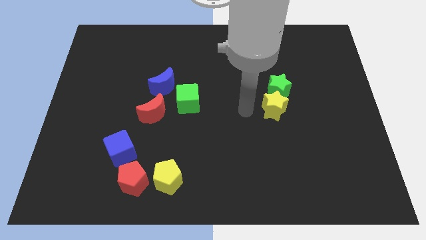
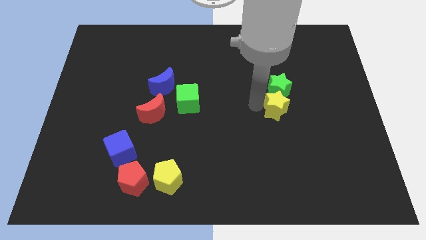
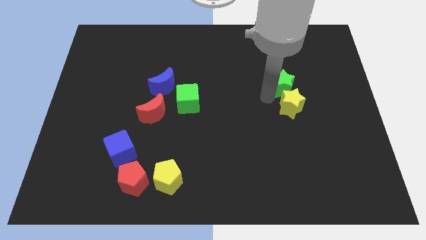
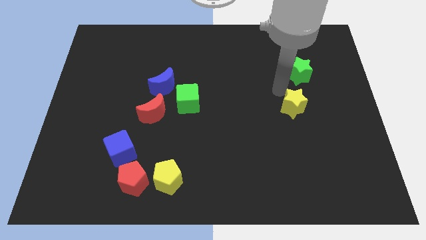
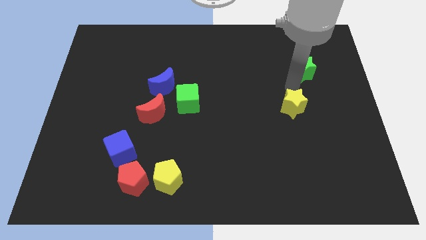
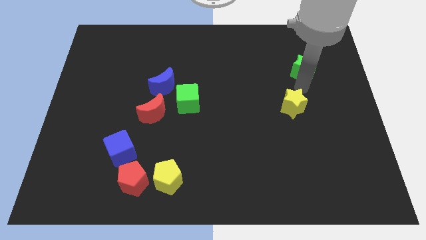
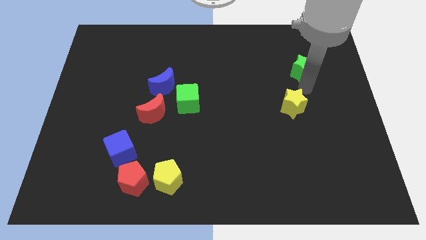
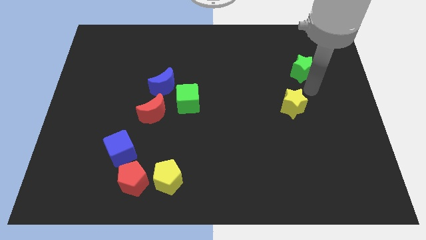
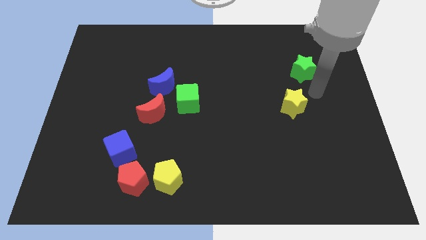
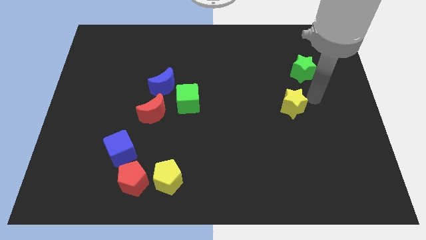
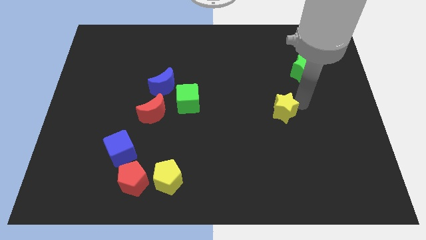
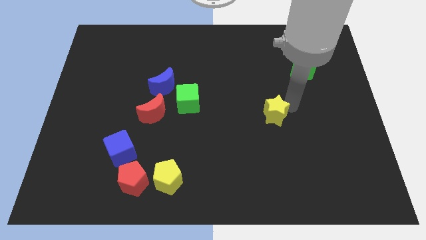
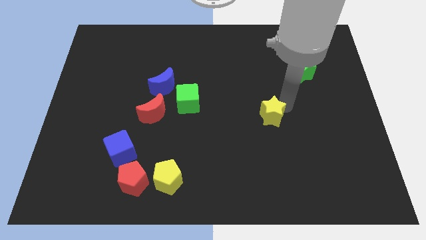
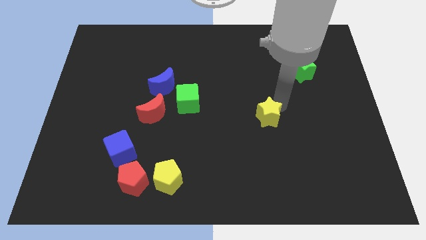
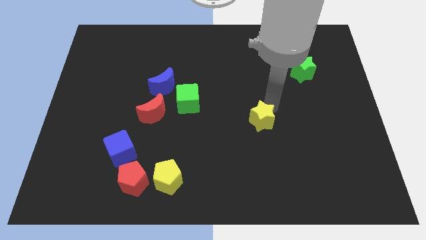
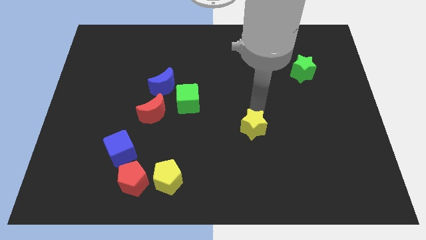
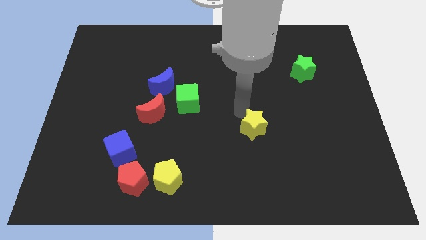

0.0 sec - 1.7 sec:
push yellow and green stars apart

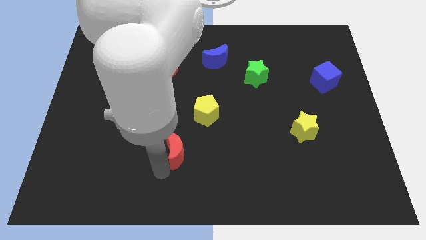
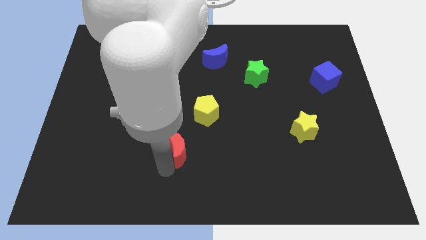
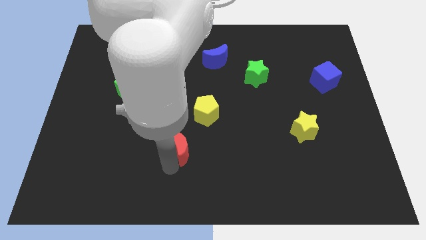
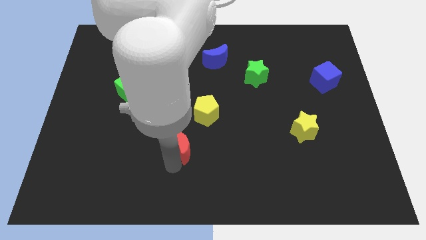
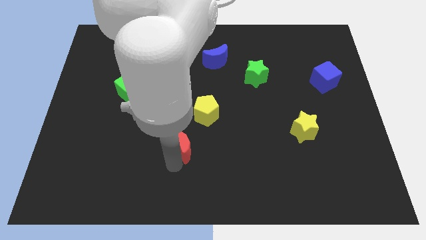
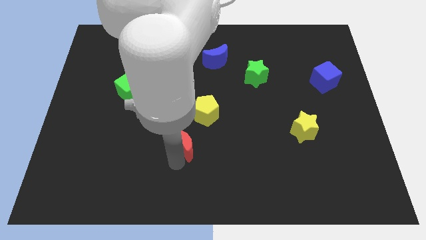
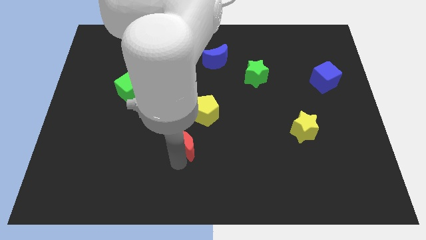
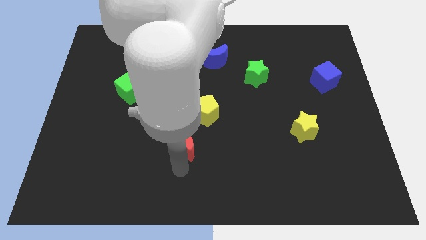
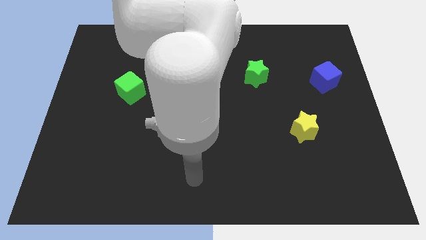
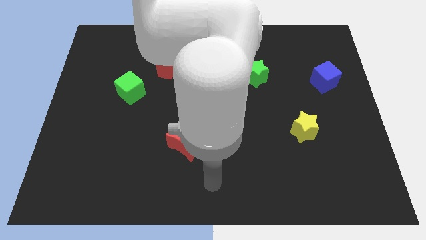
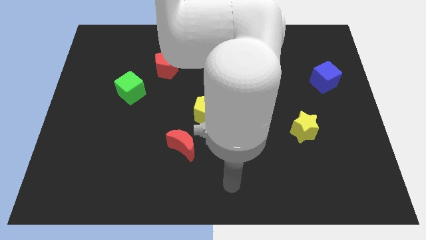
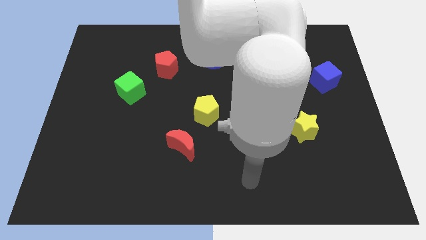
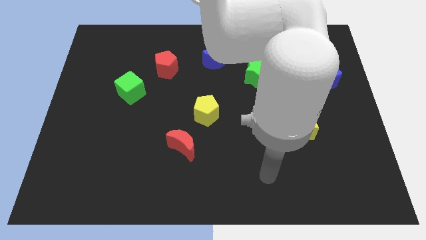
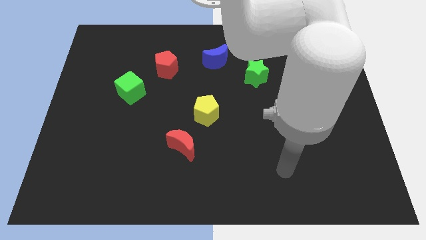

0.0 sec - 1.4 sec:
place the red moon to the bottom left of the yellow pentagon

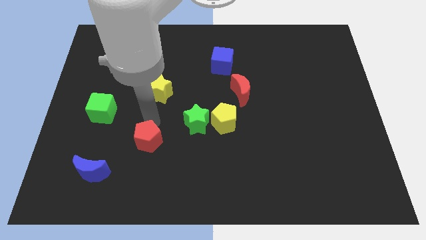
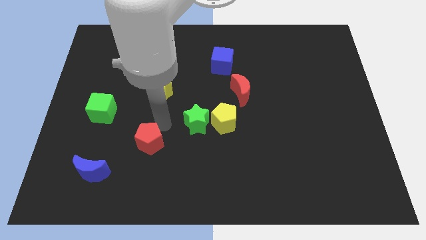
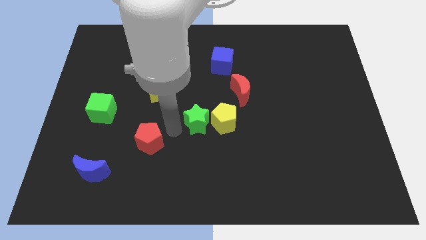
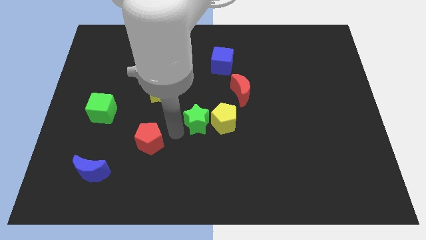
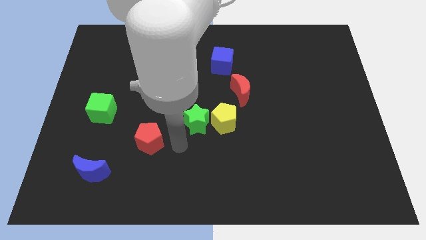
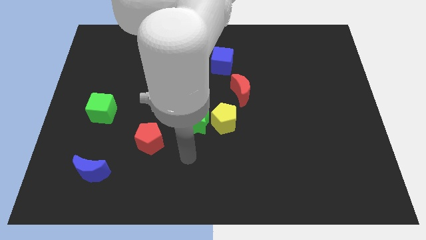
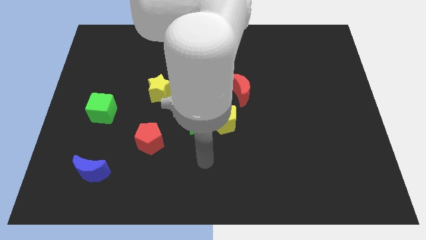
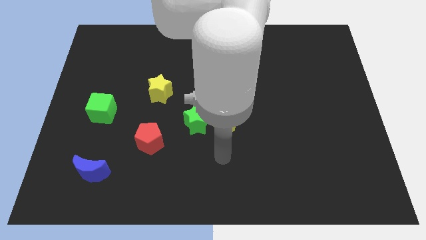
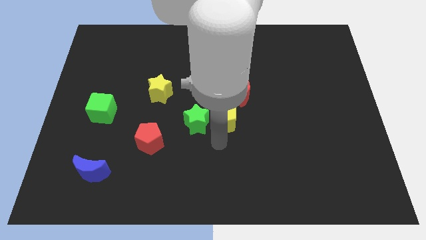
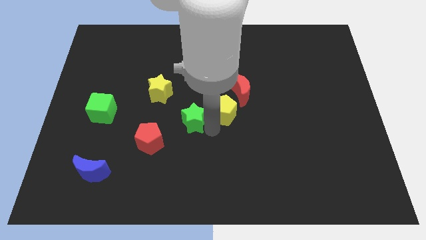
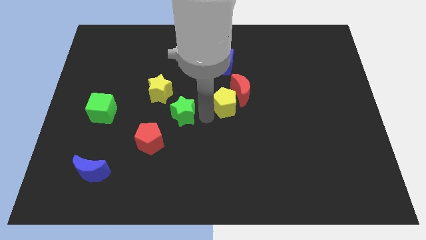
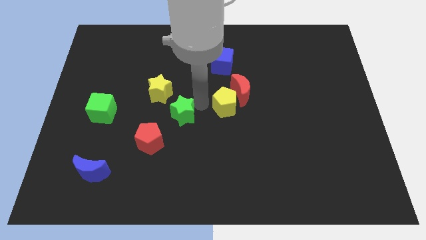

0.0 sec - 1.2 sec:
place the arm between the green star and yellow pentagon

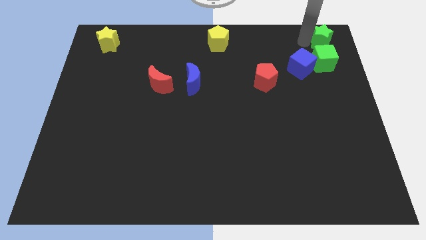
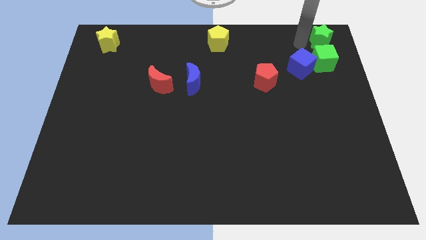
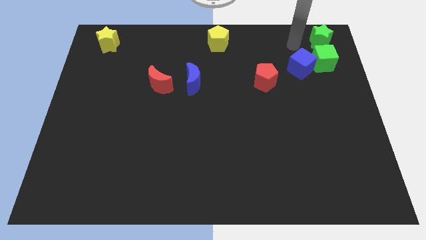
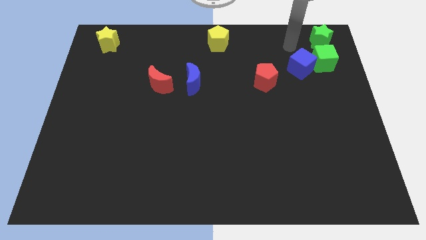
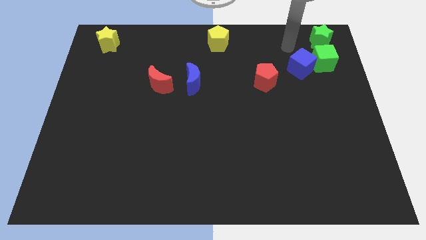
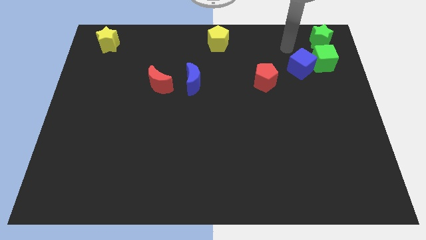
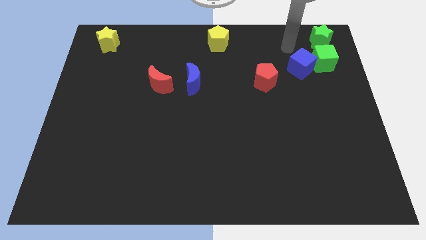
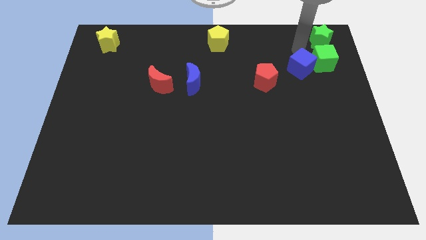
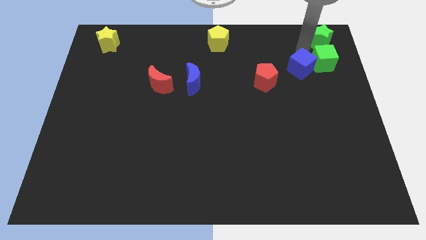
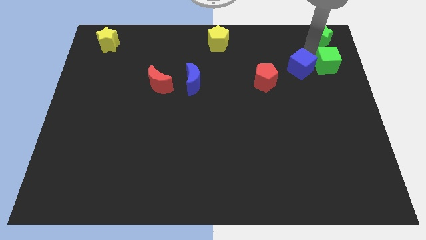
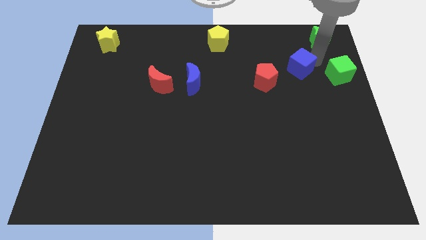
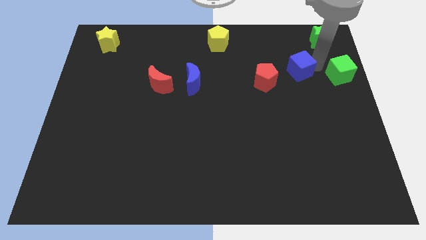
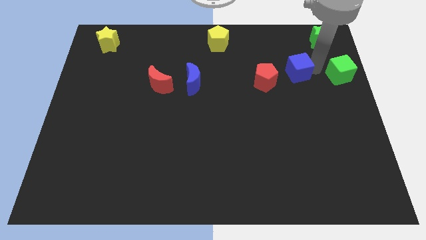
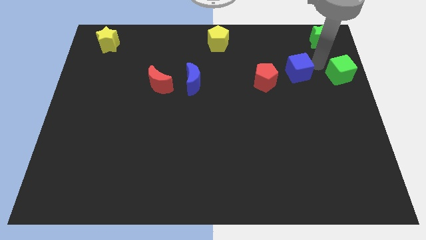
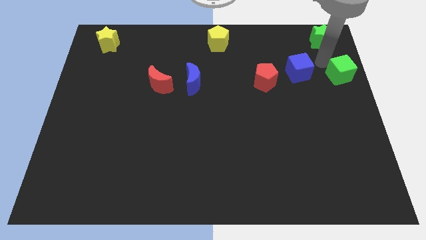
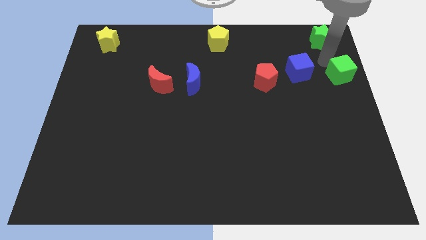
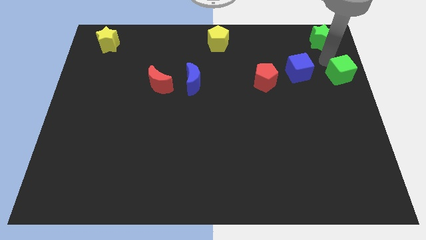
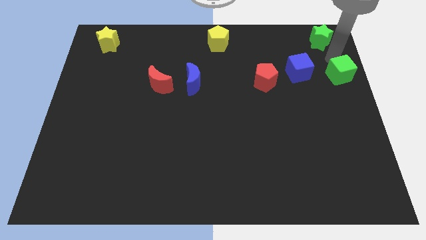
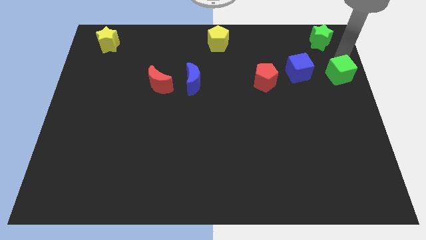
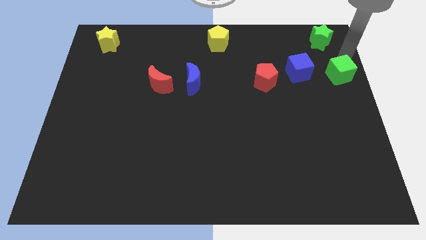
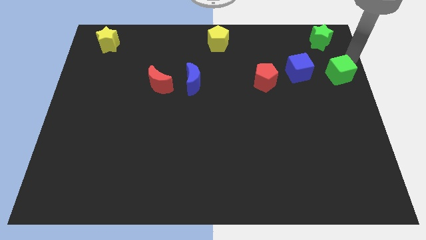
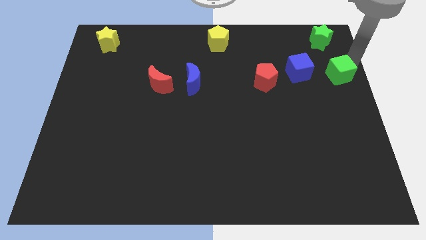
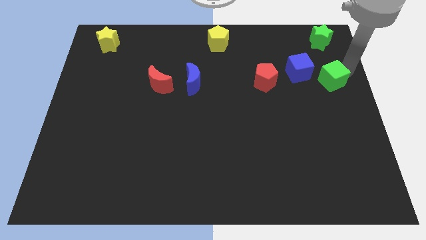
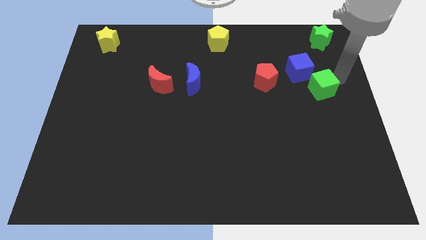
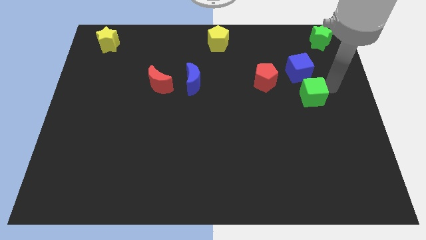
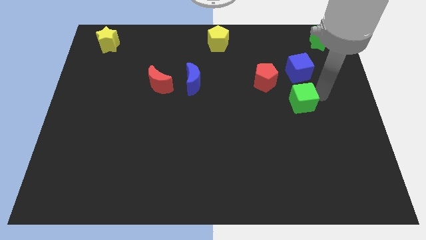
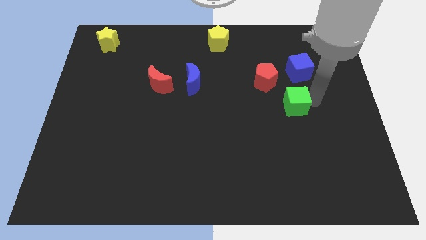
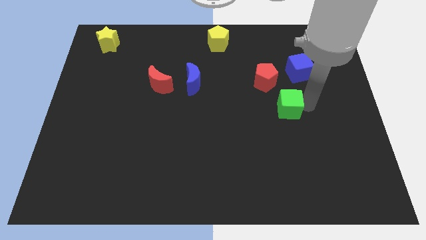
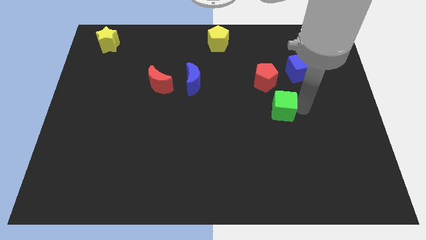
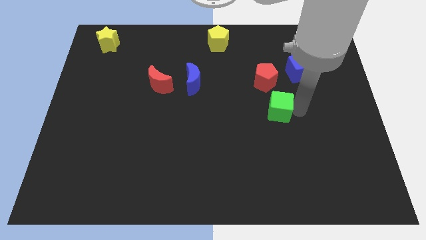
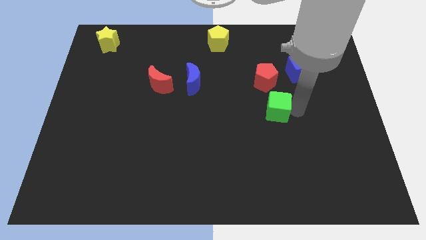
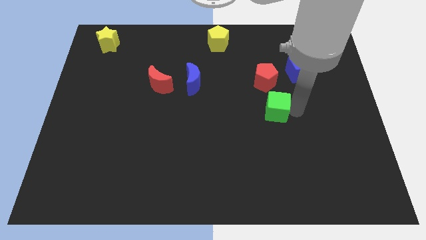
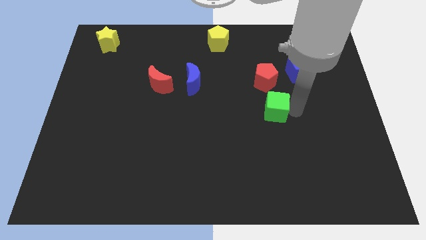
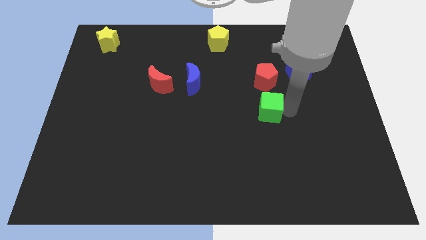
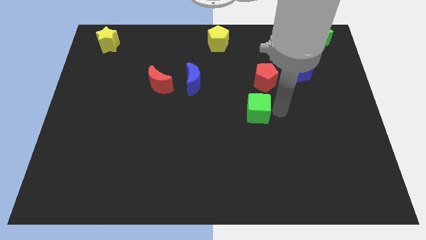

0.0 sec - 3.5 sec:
push the green cube to the bottom of the red pentagon

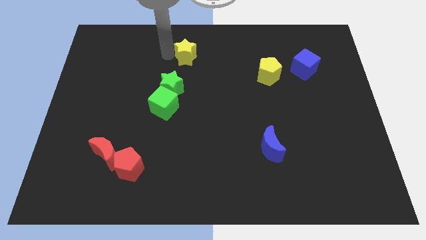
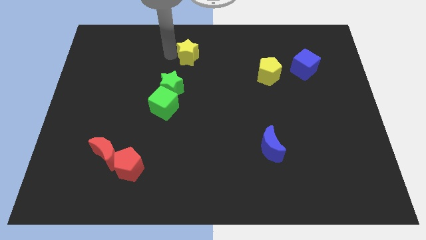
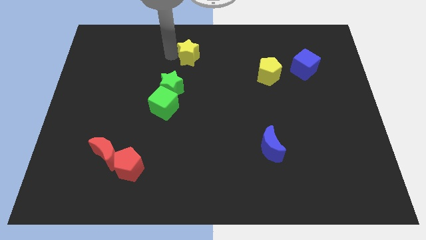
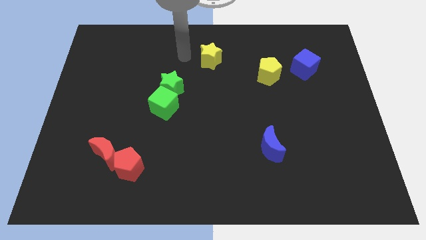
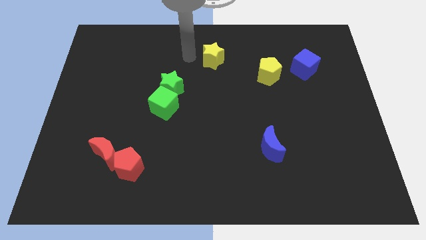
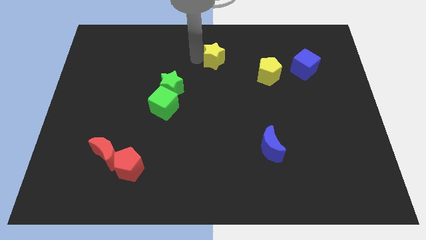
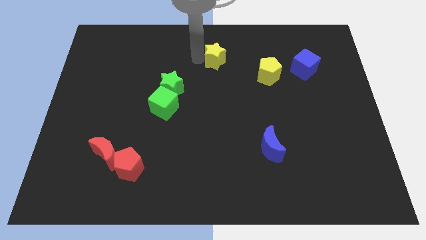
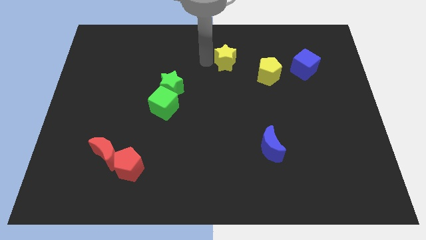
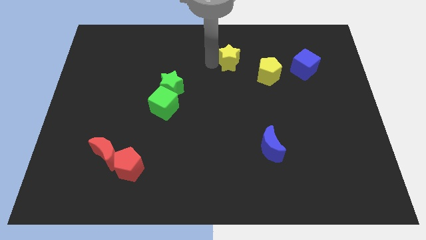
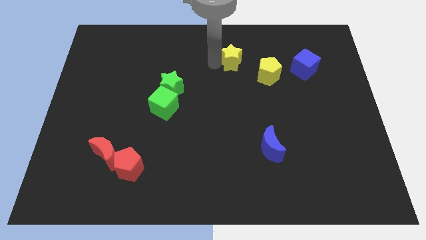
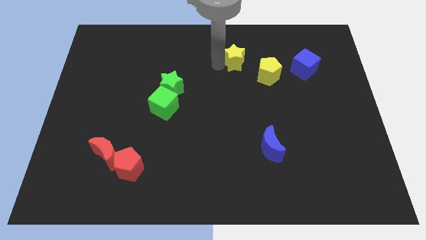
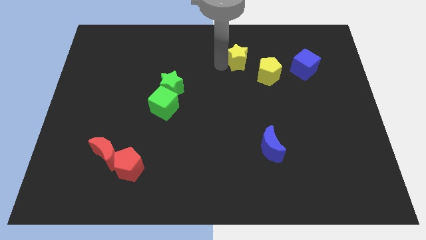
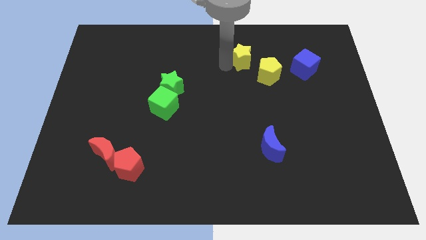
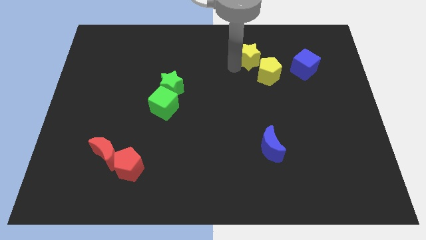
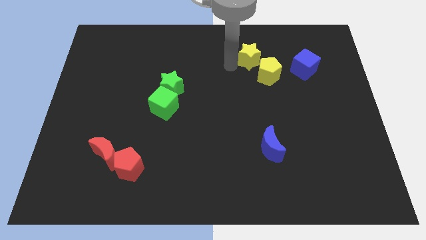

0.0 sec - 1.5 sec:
push the yellow star diagonally left to the yellow pentagon
